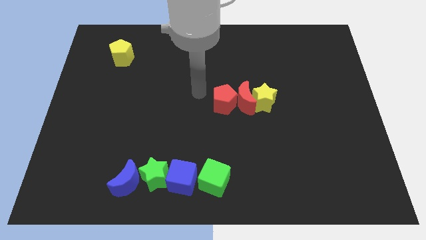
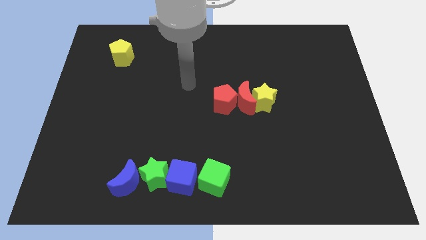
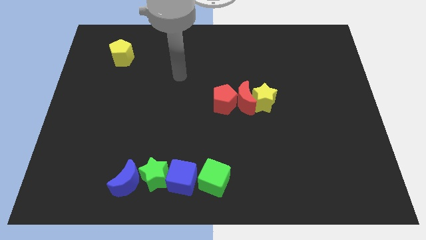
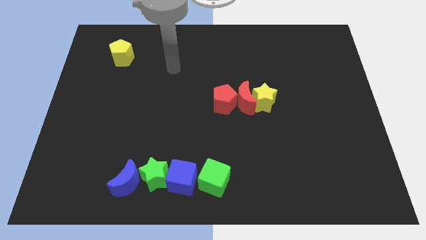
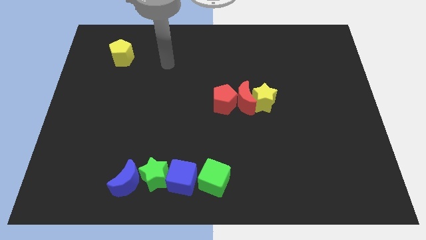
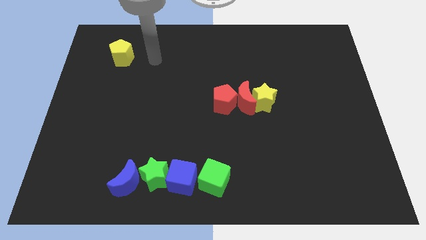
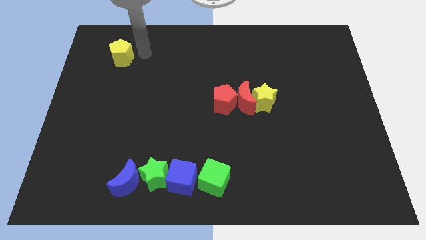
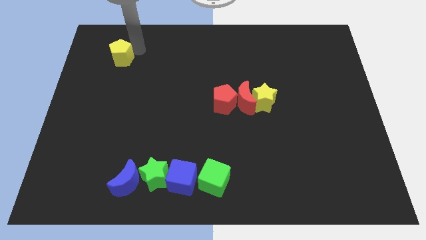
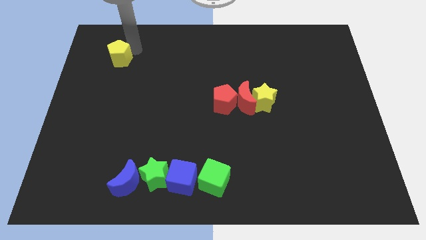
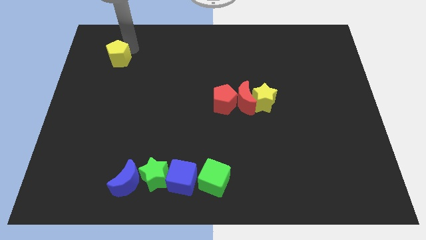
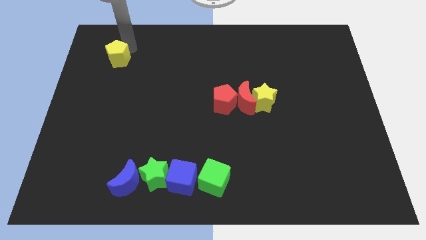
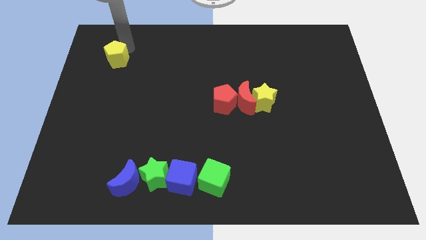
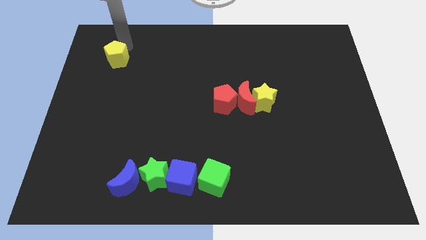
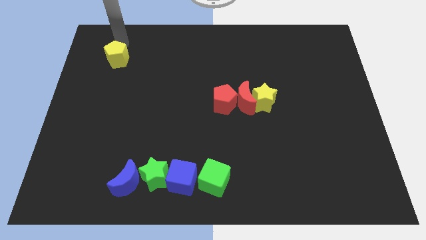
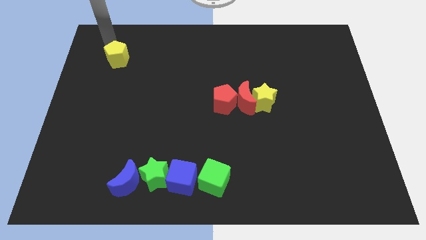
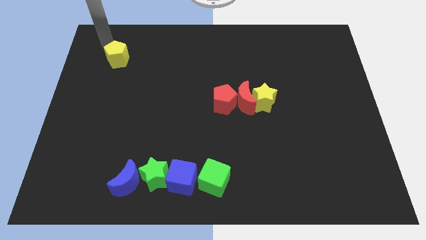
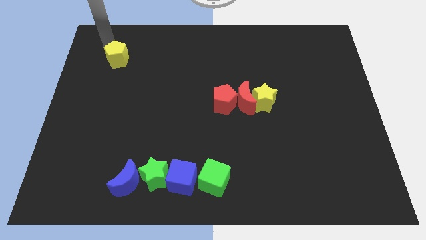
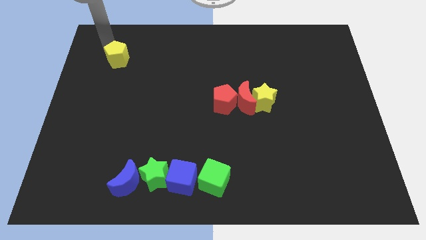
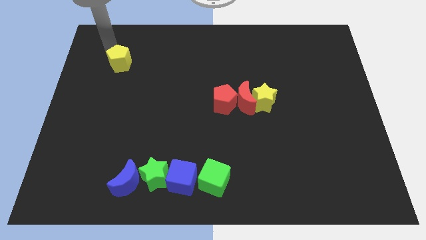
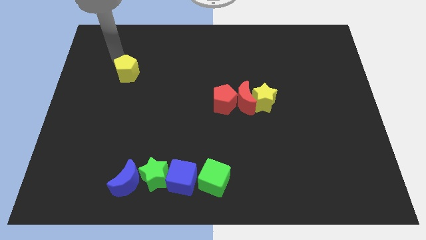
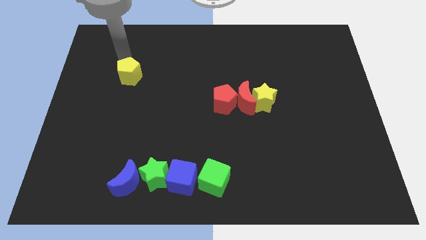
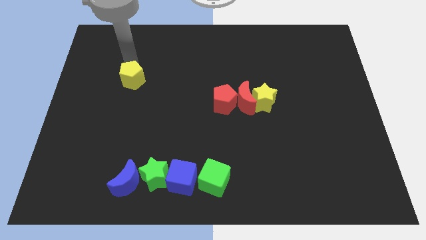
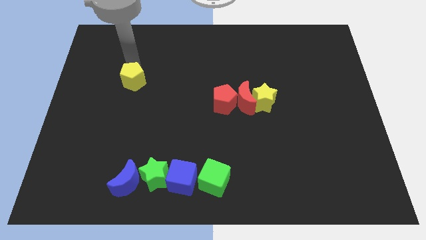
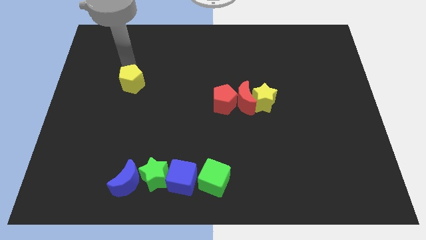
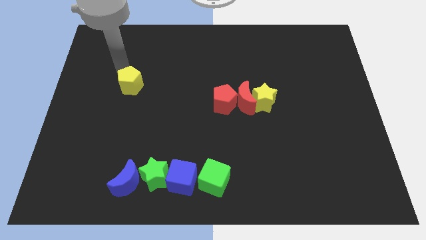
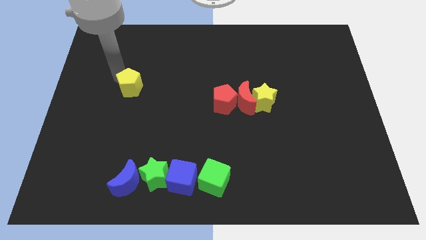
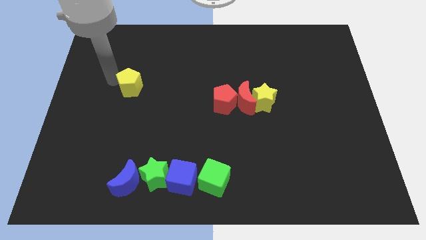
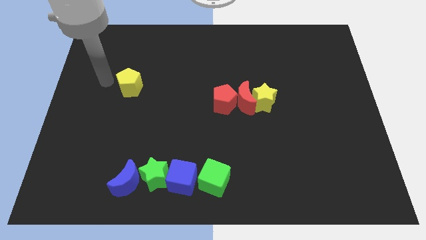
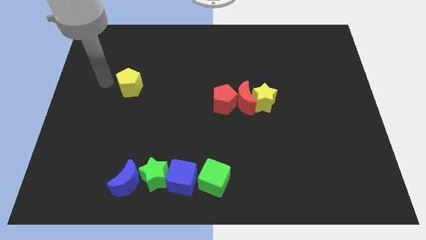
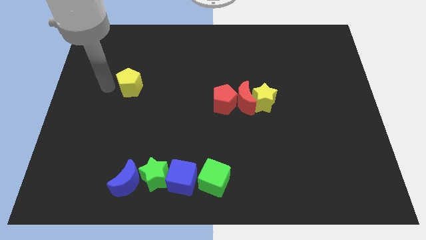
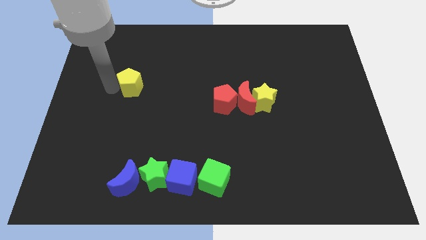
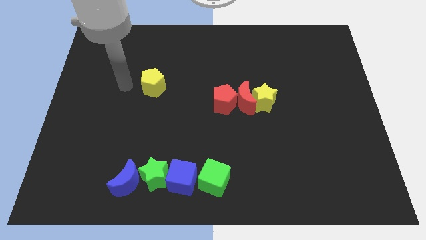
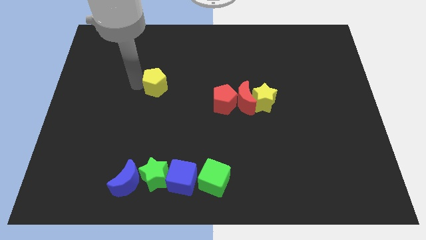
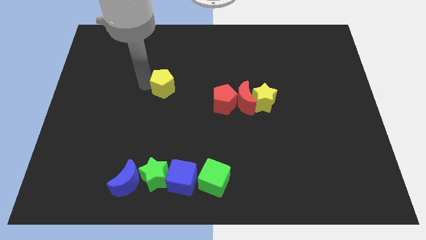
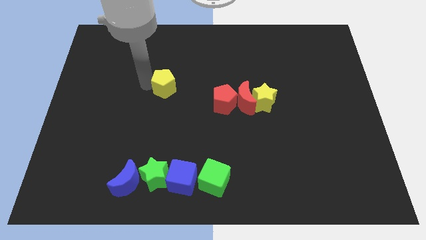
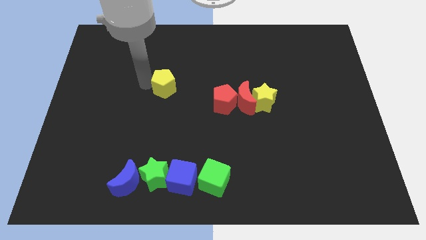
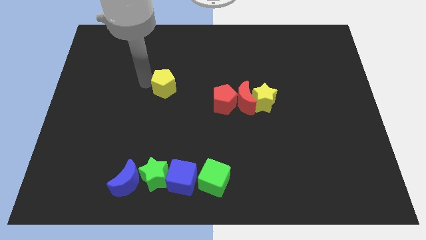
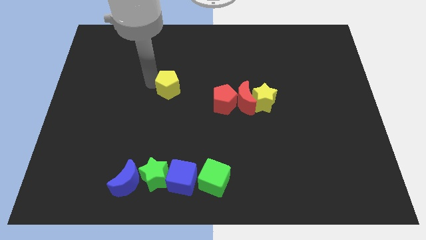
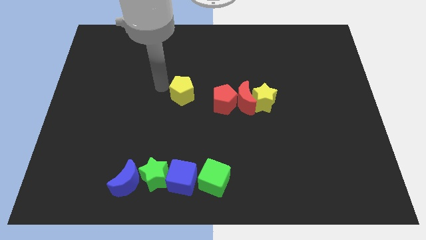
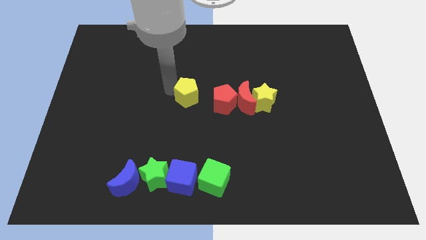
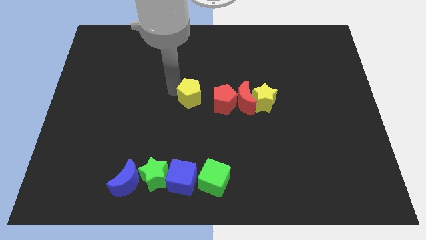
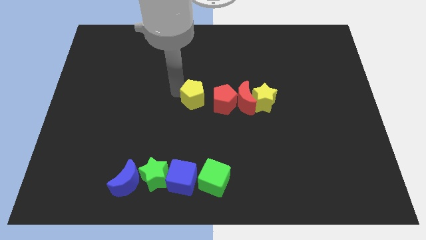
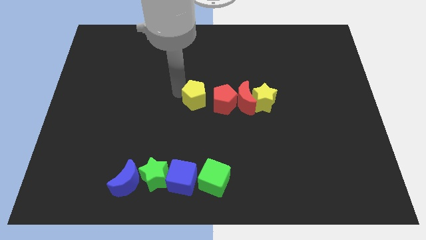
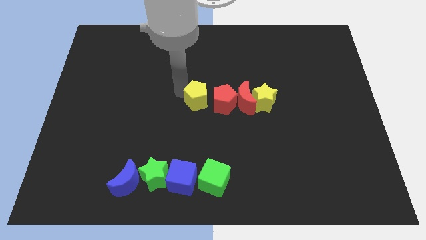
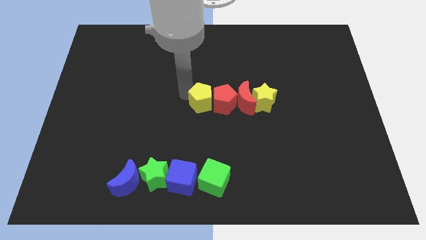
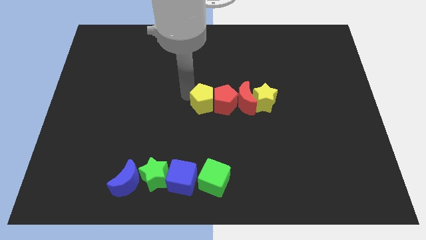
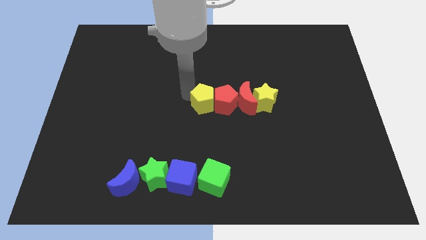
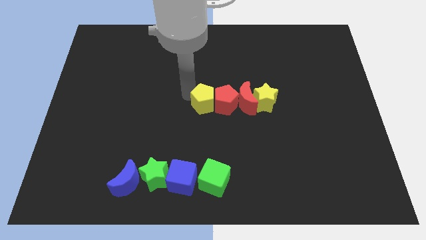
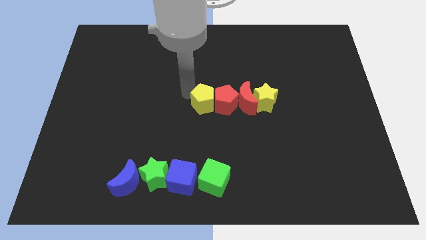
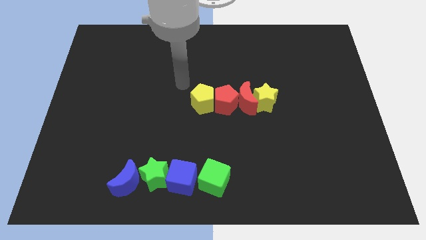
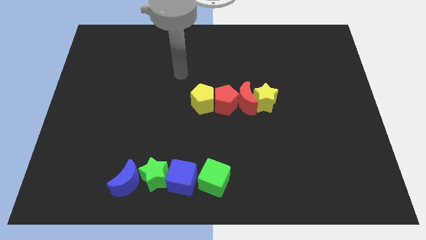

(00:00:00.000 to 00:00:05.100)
place the yellow pentagon to the left side of red pentagon

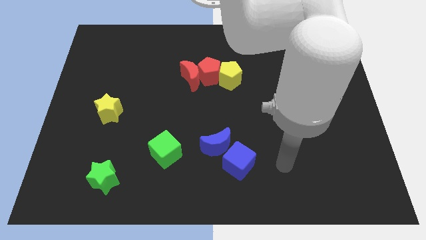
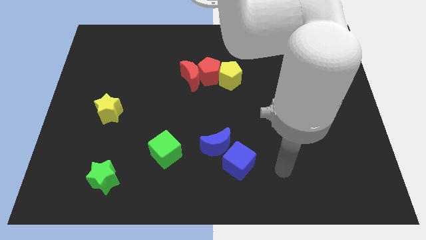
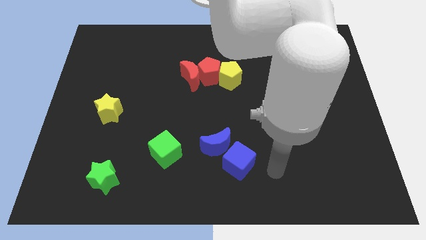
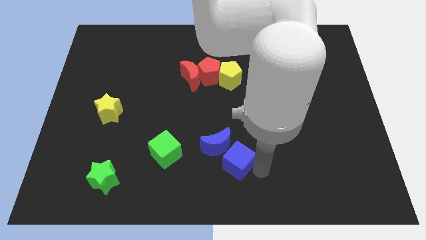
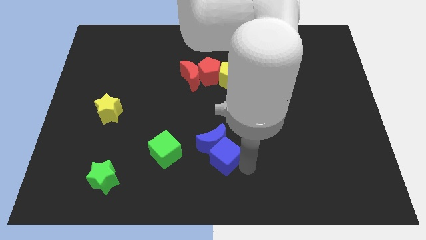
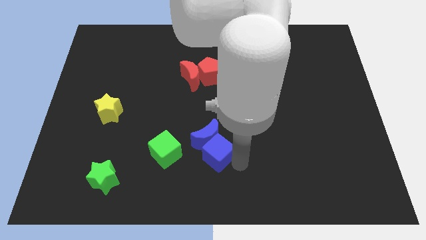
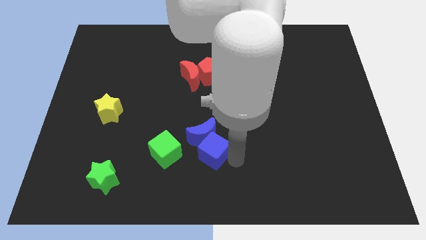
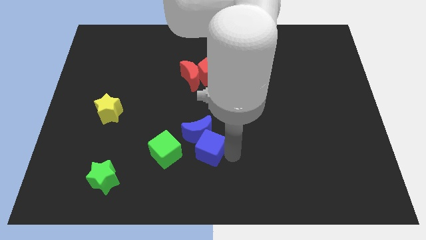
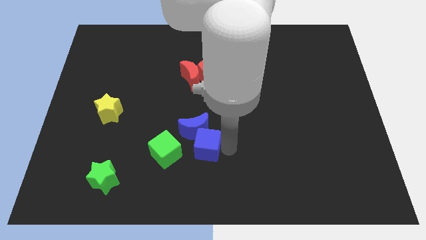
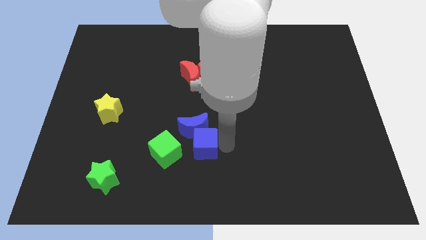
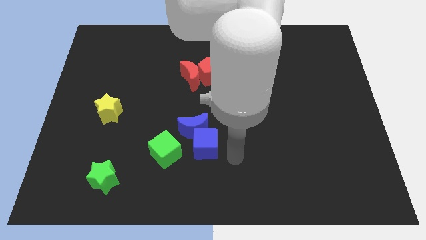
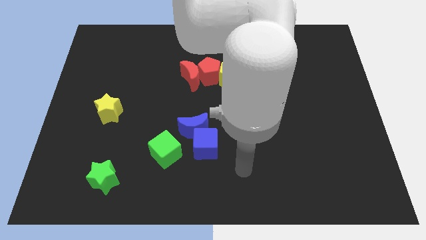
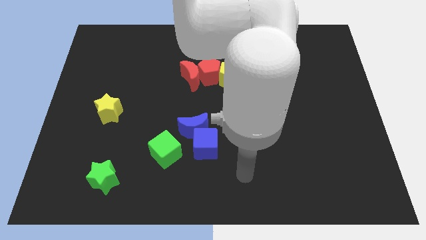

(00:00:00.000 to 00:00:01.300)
push blue cube in to blue crescent

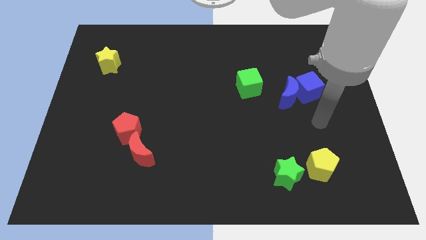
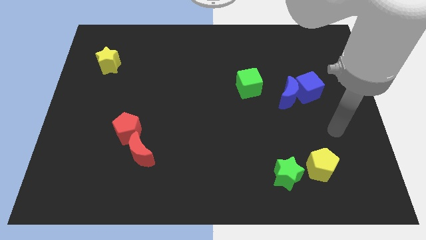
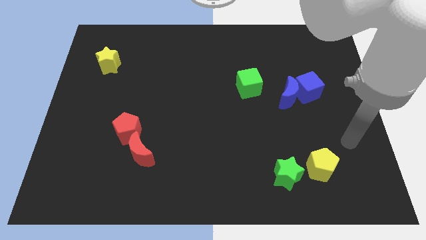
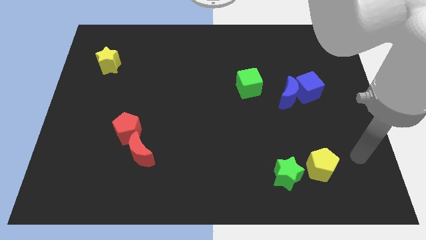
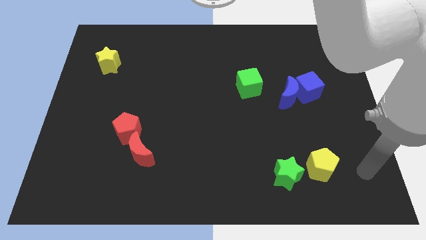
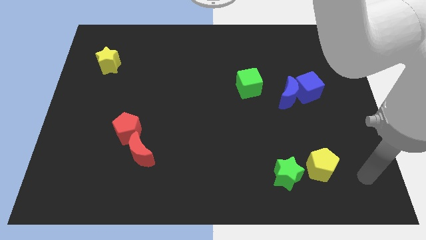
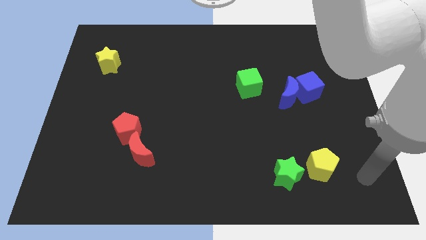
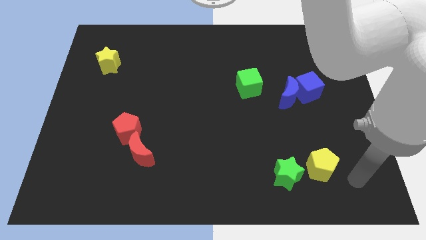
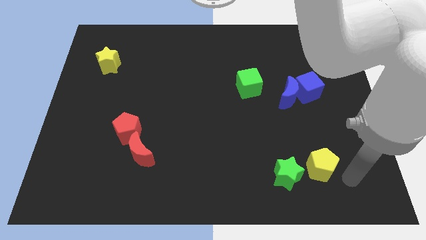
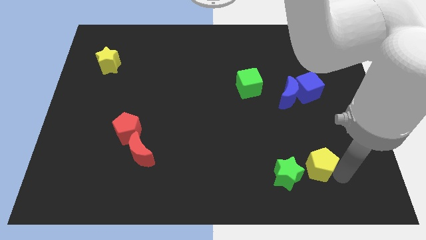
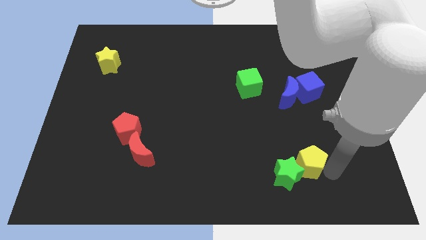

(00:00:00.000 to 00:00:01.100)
move the arm to the bottom right of the yellow pentagon

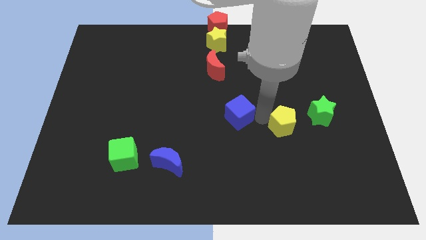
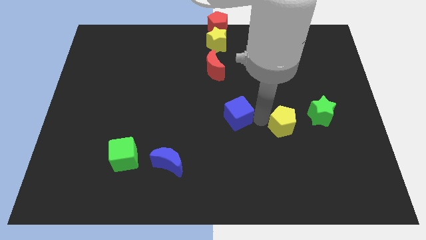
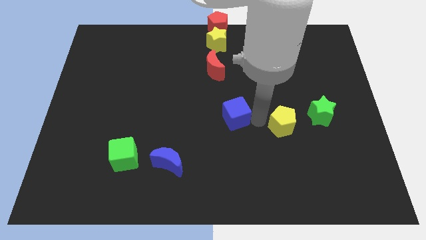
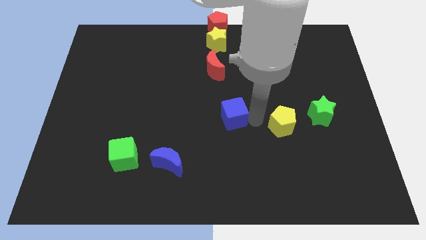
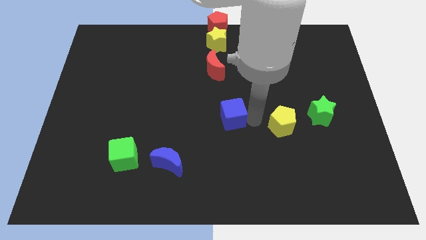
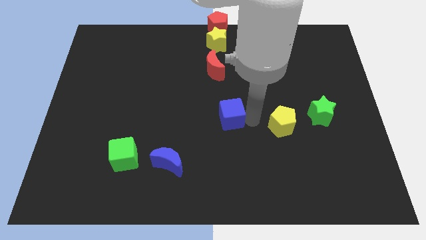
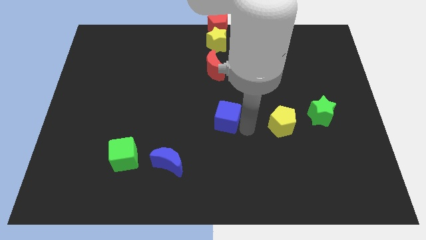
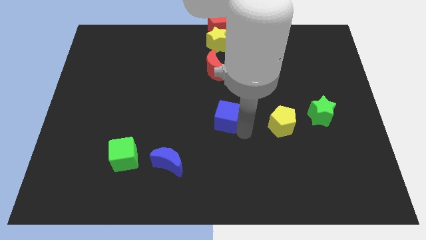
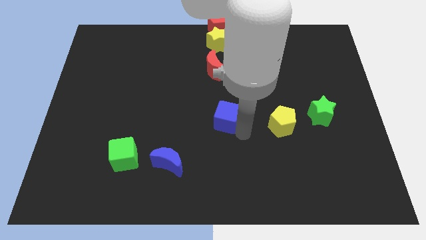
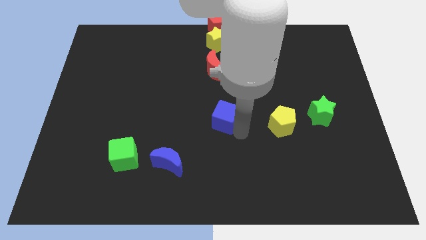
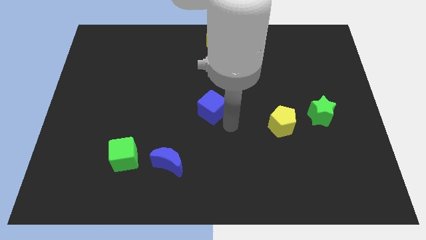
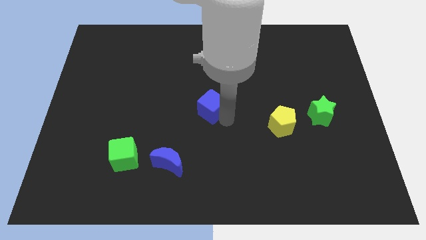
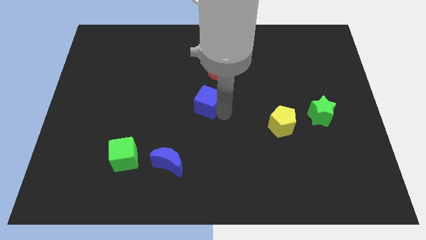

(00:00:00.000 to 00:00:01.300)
place blue cube at center

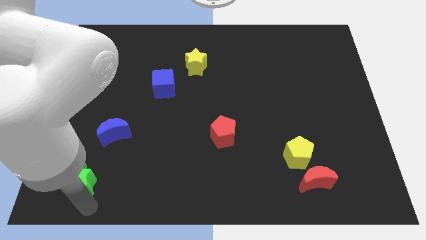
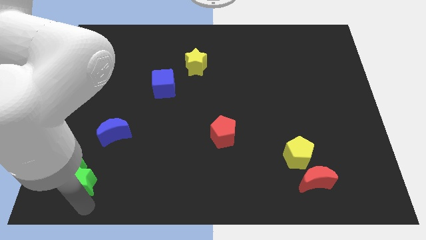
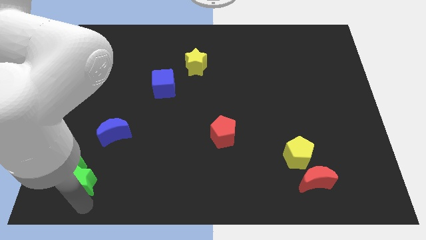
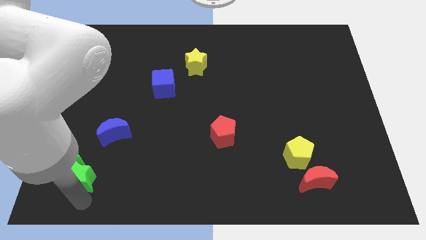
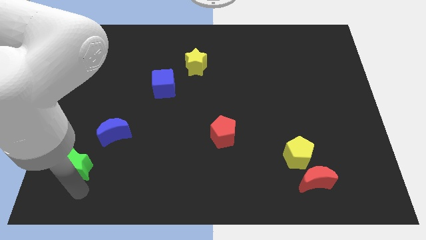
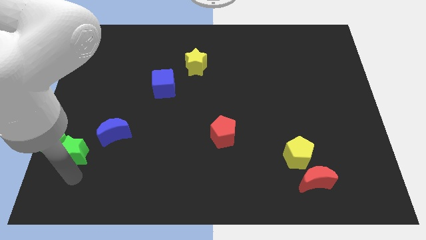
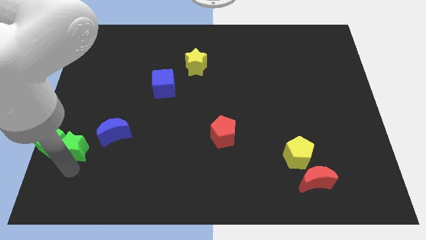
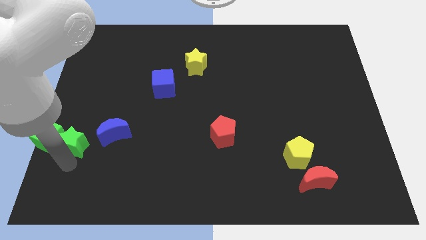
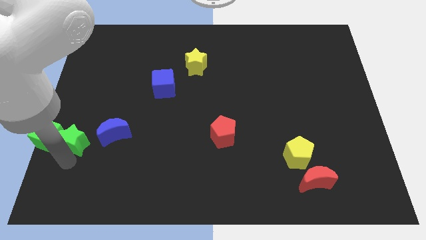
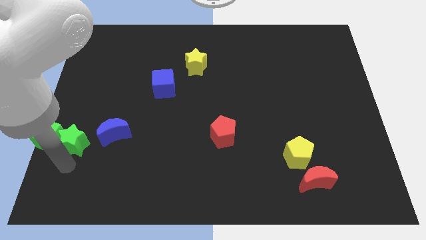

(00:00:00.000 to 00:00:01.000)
move the green blocks to the left of the blue crescent
